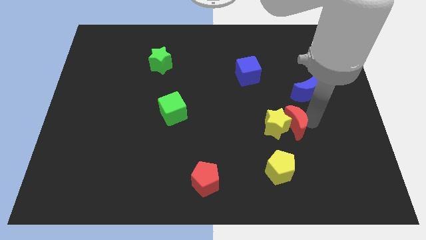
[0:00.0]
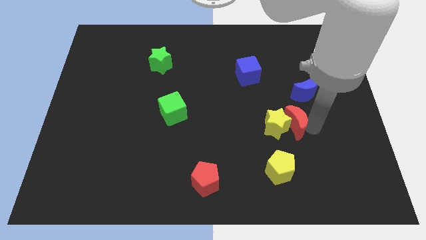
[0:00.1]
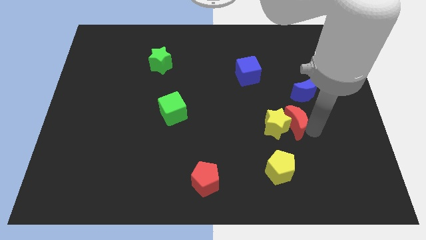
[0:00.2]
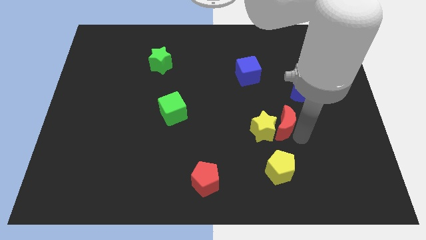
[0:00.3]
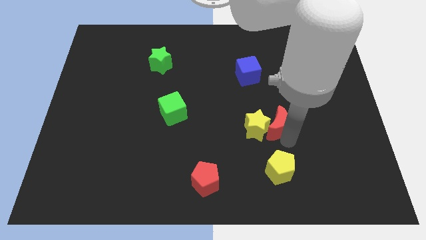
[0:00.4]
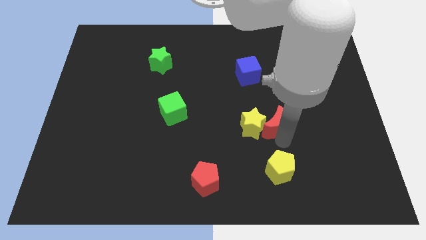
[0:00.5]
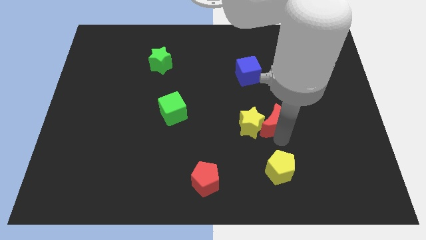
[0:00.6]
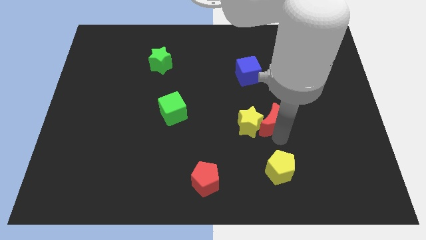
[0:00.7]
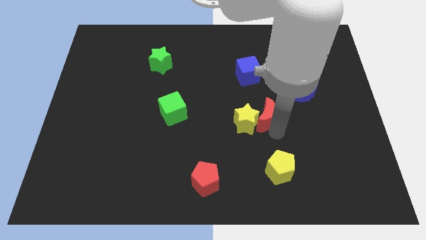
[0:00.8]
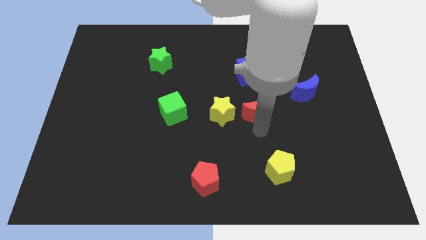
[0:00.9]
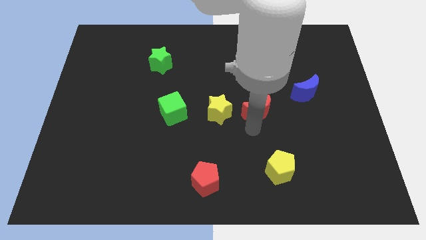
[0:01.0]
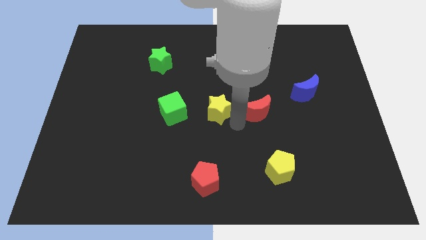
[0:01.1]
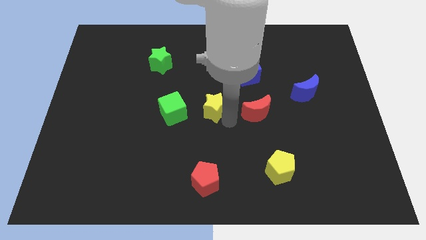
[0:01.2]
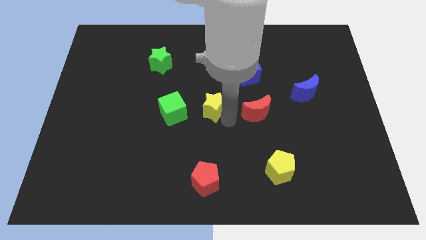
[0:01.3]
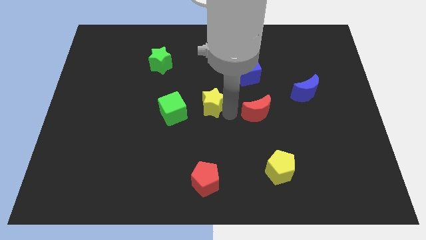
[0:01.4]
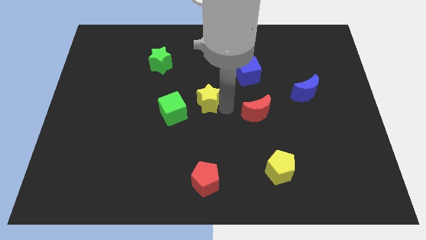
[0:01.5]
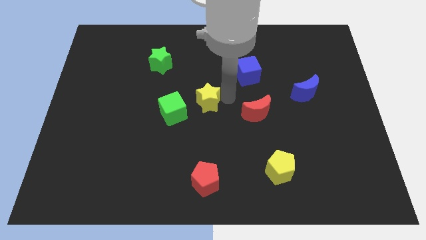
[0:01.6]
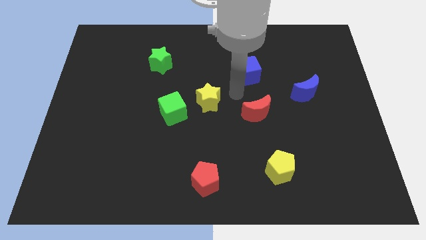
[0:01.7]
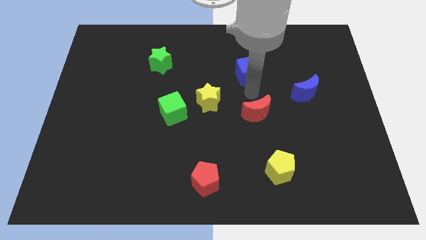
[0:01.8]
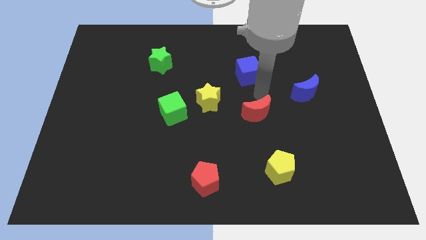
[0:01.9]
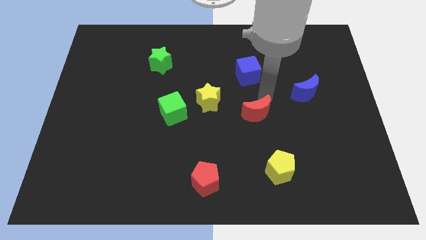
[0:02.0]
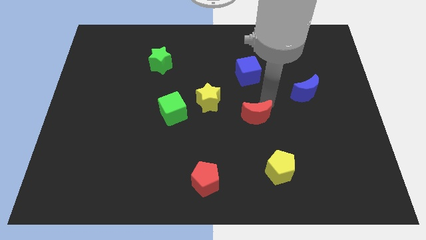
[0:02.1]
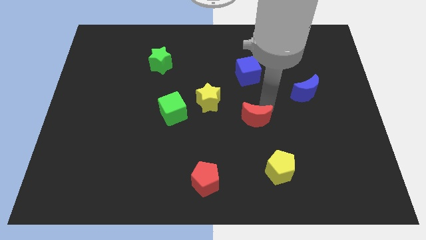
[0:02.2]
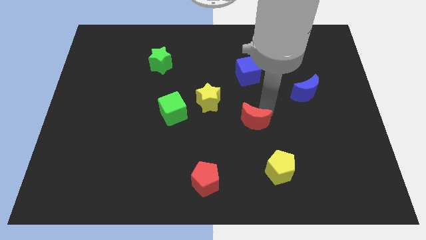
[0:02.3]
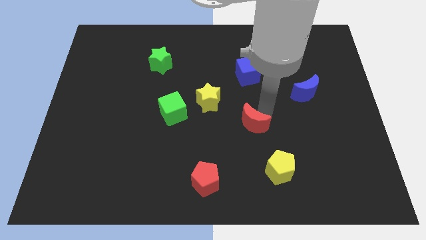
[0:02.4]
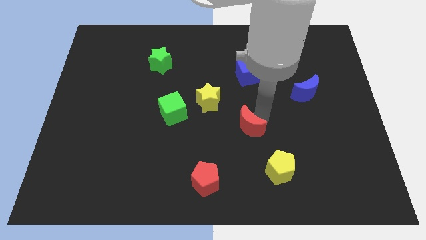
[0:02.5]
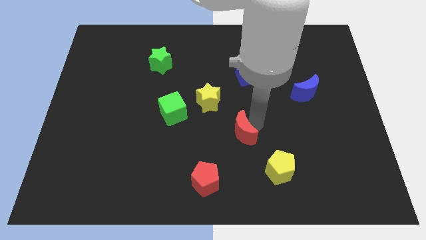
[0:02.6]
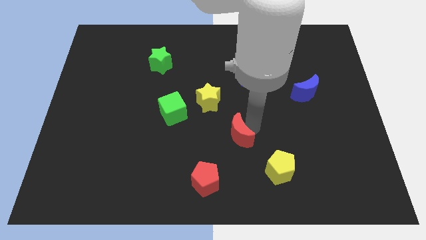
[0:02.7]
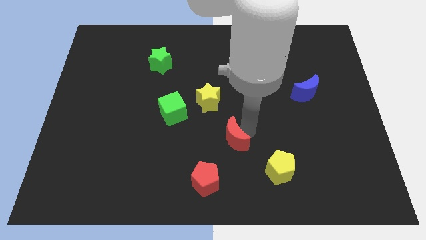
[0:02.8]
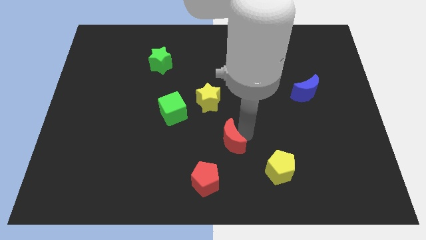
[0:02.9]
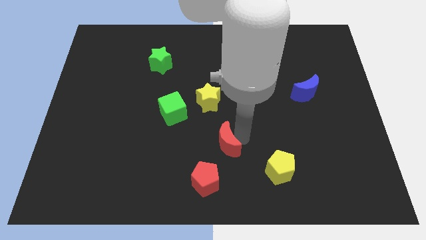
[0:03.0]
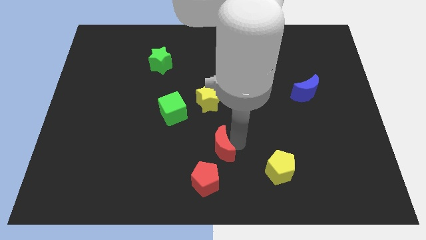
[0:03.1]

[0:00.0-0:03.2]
separate yellow star and the red moon

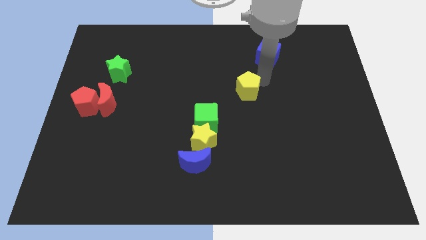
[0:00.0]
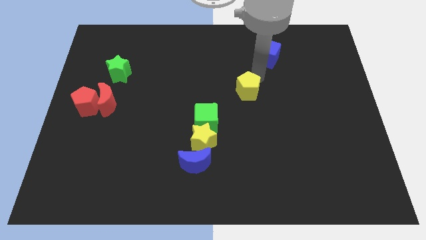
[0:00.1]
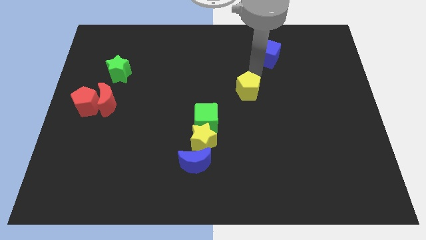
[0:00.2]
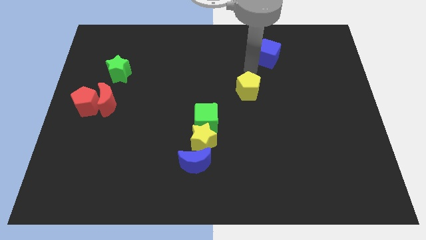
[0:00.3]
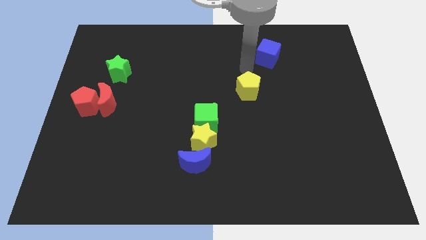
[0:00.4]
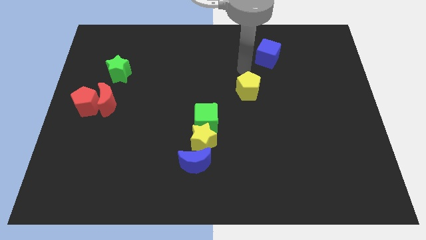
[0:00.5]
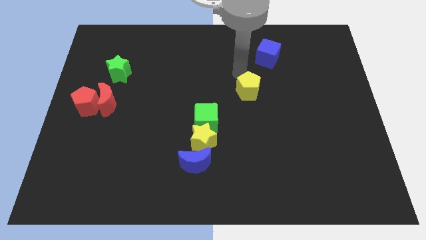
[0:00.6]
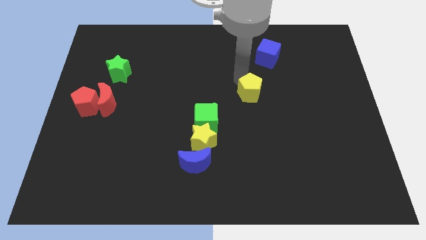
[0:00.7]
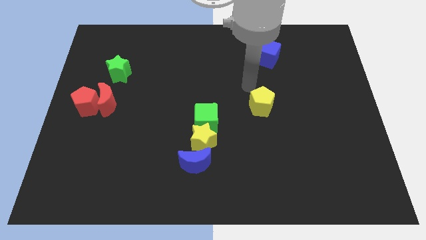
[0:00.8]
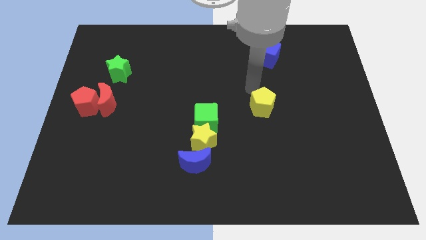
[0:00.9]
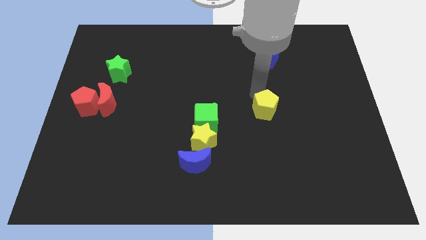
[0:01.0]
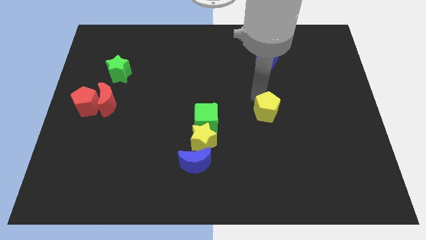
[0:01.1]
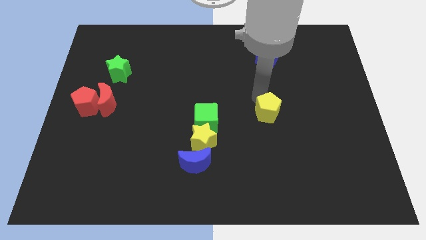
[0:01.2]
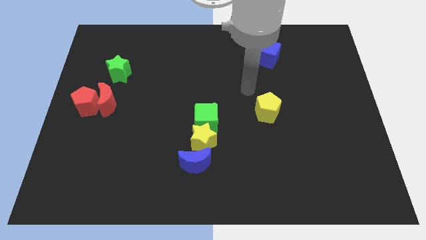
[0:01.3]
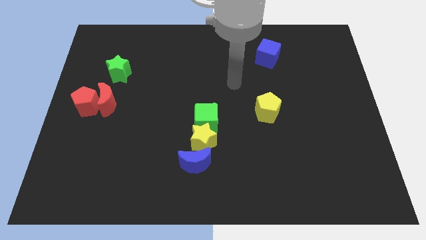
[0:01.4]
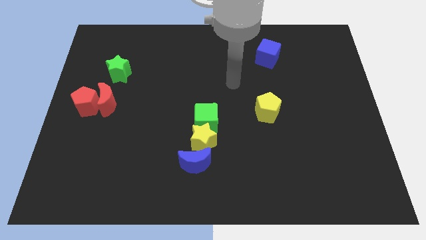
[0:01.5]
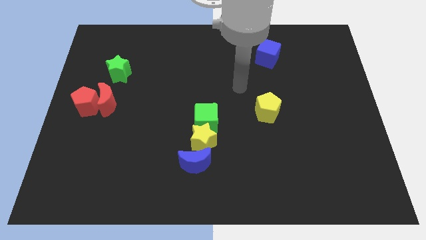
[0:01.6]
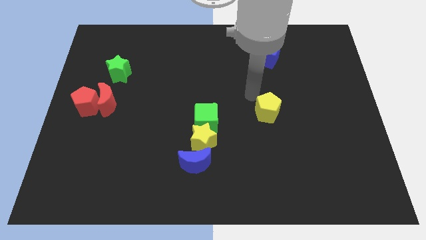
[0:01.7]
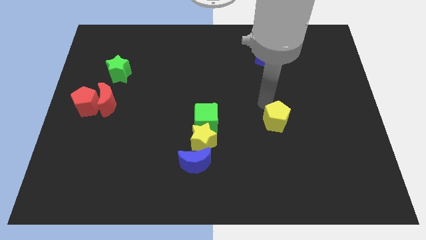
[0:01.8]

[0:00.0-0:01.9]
move the yellow pentagon horizontally right to the green cube

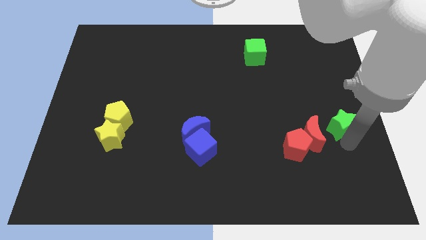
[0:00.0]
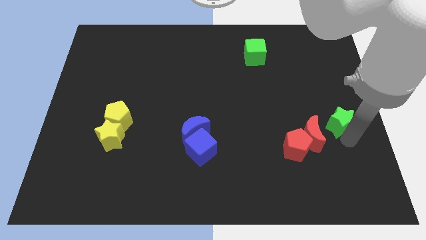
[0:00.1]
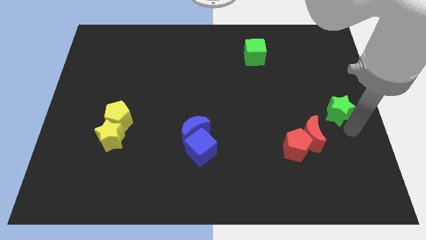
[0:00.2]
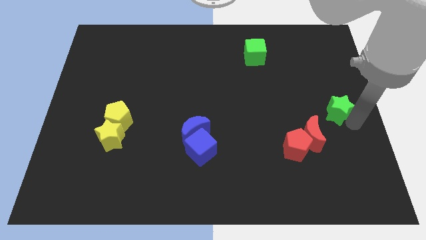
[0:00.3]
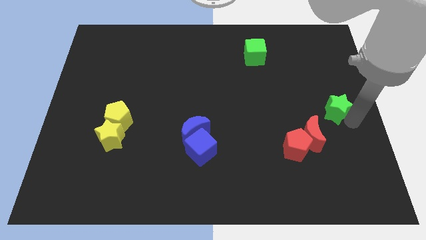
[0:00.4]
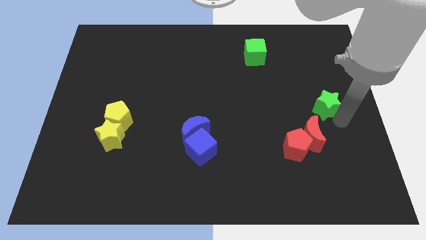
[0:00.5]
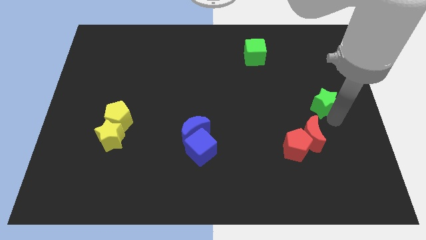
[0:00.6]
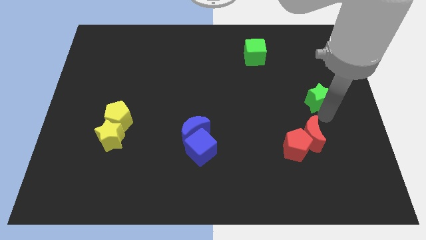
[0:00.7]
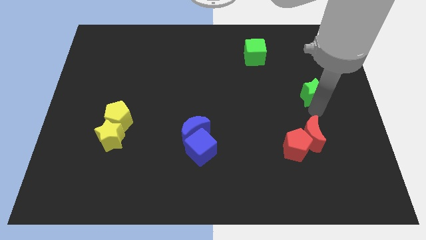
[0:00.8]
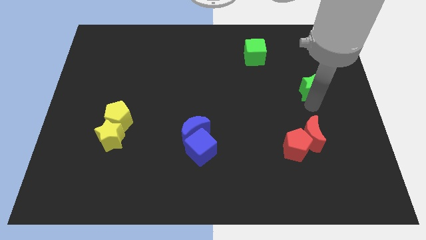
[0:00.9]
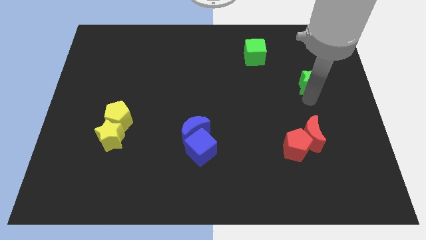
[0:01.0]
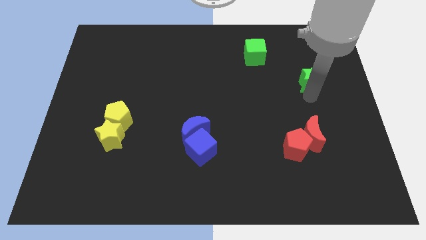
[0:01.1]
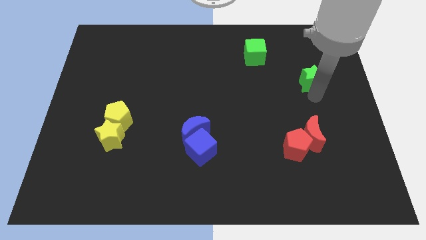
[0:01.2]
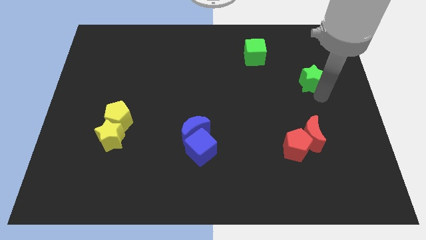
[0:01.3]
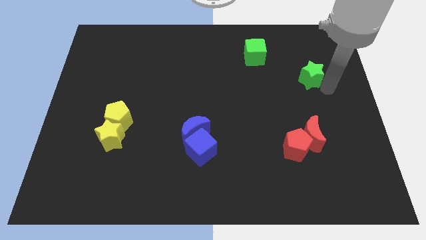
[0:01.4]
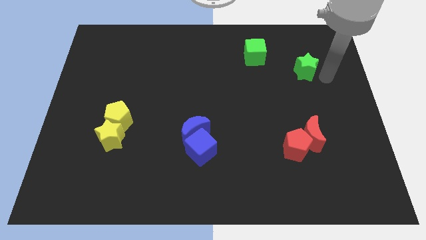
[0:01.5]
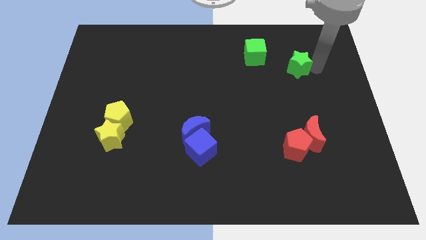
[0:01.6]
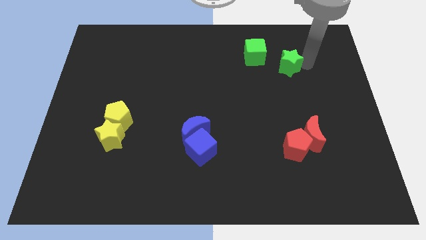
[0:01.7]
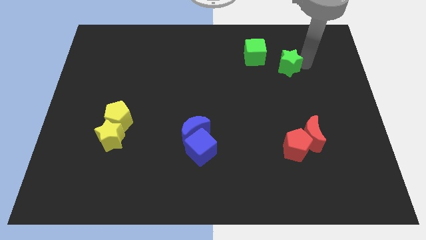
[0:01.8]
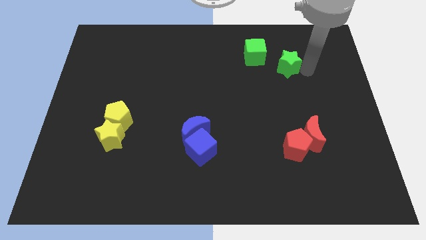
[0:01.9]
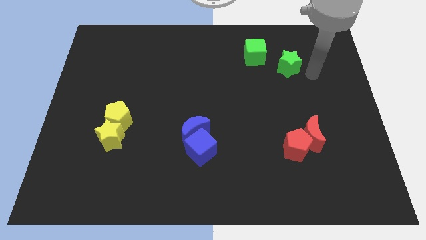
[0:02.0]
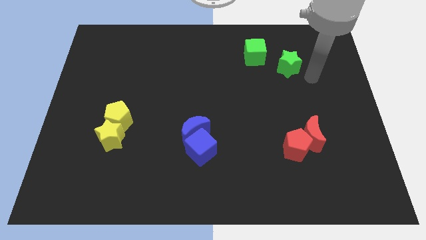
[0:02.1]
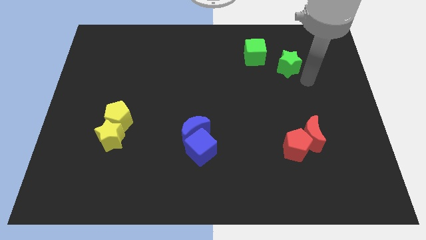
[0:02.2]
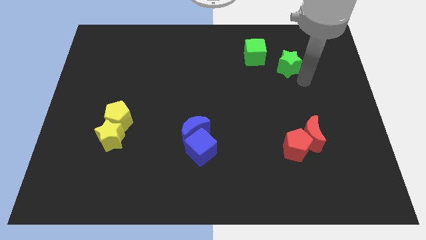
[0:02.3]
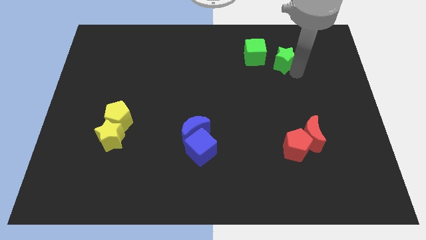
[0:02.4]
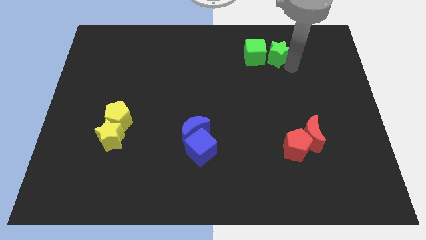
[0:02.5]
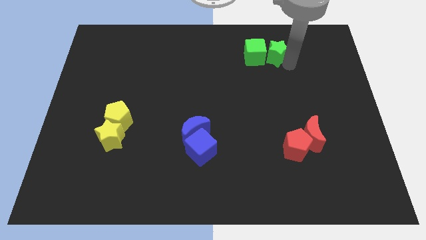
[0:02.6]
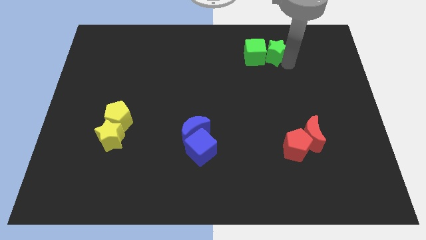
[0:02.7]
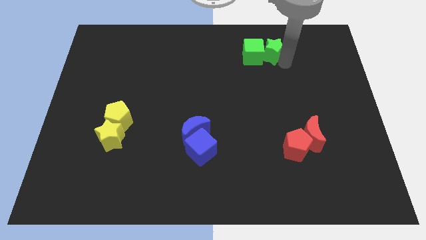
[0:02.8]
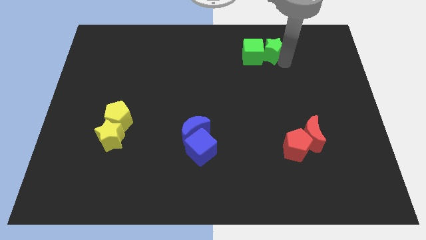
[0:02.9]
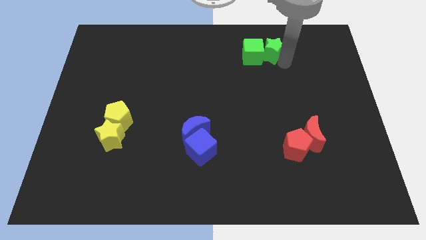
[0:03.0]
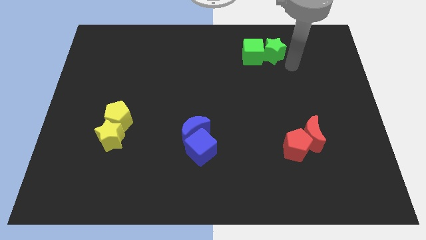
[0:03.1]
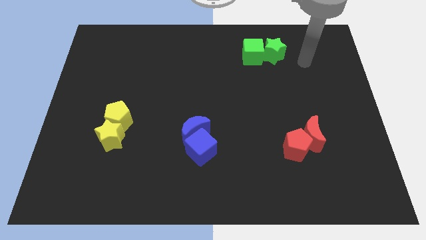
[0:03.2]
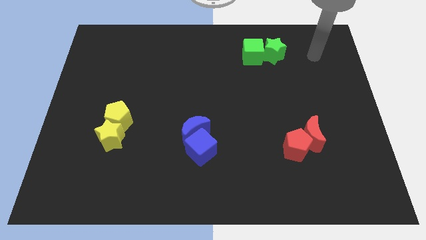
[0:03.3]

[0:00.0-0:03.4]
move the green star to the green cube

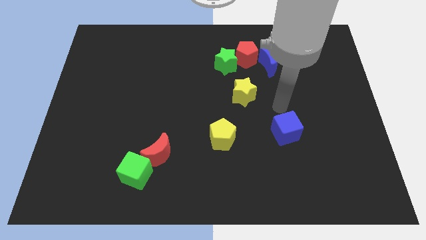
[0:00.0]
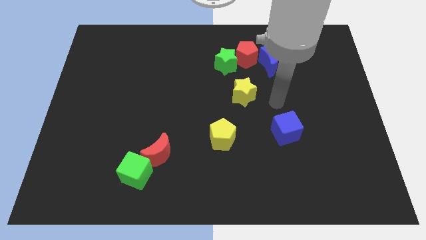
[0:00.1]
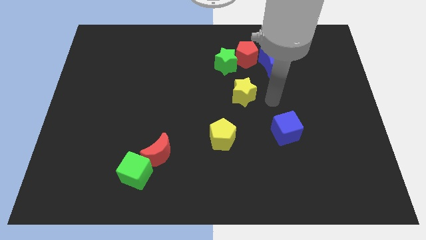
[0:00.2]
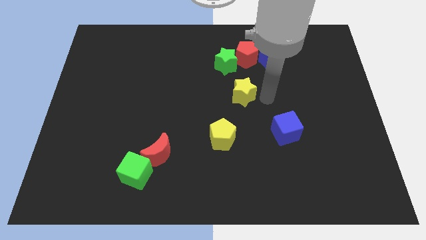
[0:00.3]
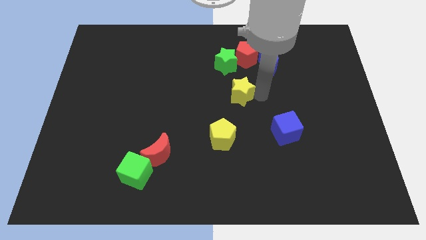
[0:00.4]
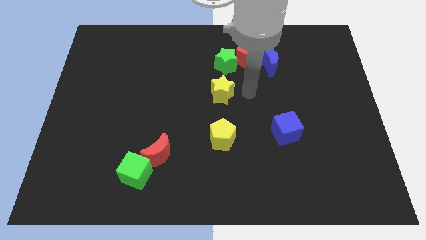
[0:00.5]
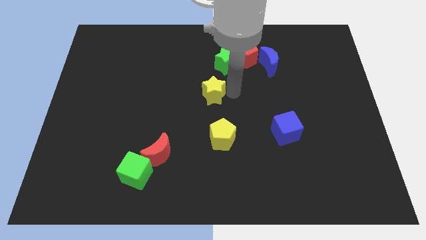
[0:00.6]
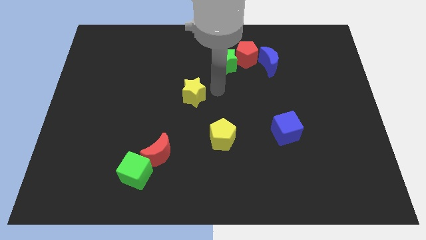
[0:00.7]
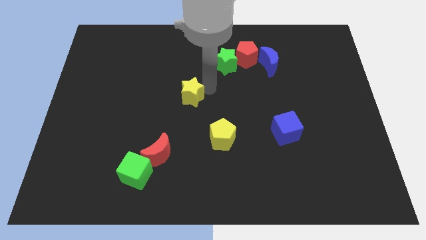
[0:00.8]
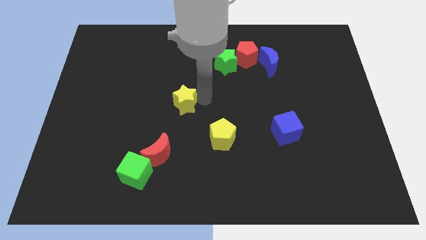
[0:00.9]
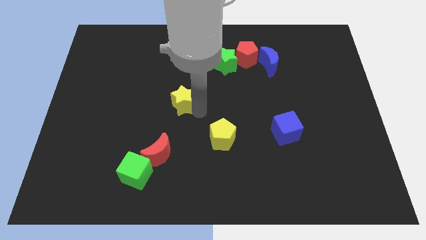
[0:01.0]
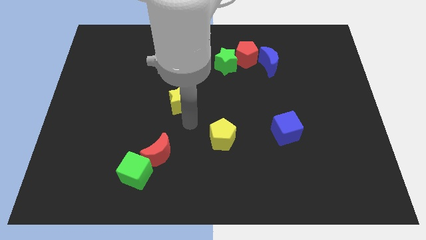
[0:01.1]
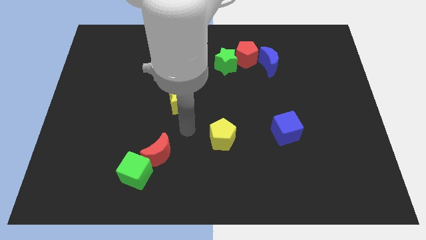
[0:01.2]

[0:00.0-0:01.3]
push the yellow star to the left
